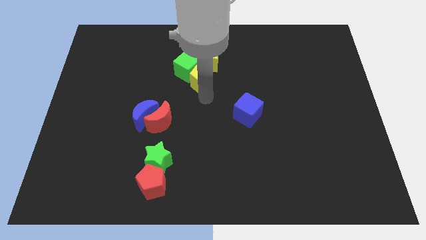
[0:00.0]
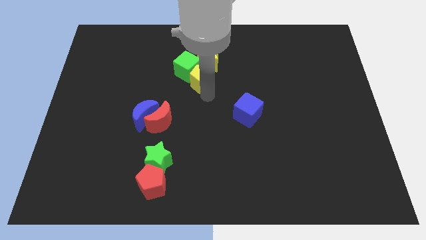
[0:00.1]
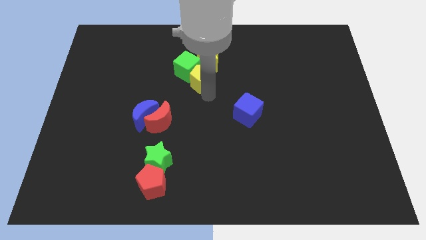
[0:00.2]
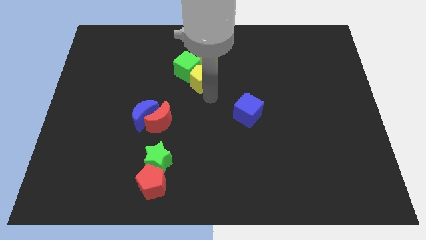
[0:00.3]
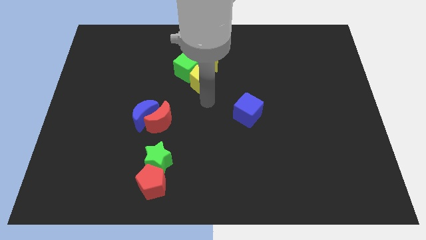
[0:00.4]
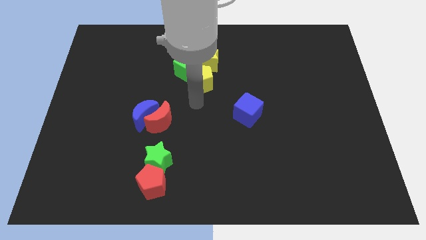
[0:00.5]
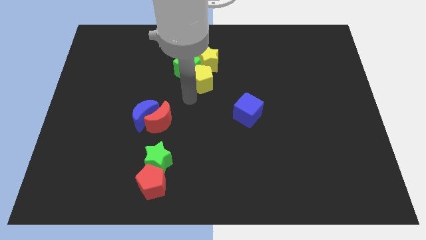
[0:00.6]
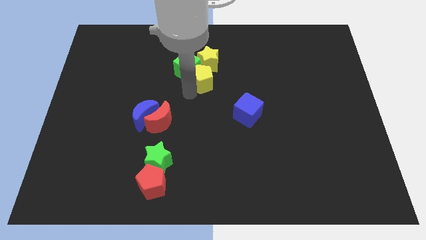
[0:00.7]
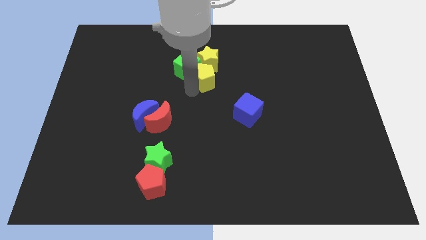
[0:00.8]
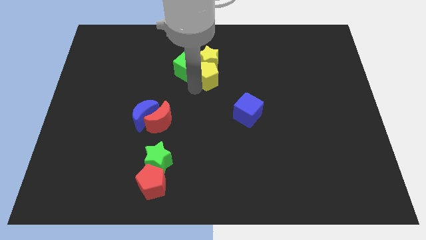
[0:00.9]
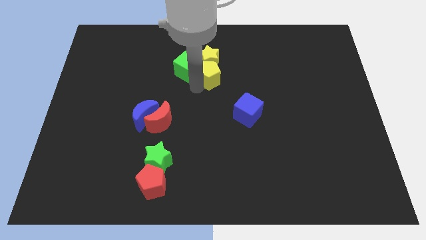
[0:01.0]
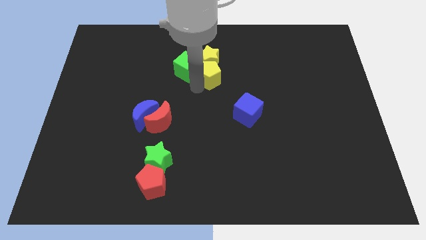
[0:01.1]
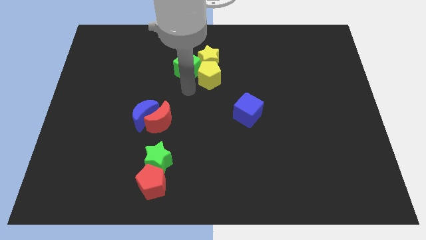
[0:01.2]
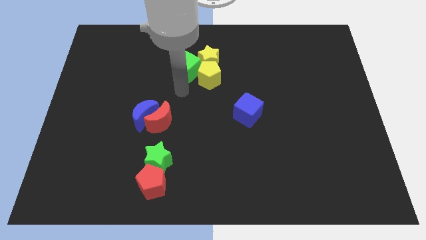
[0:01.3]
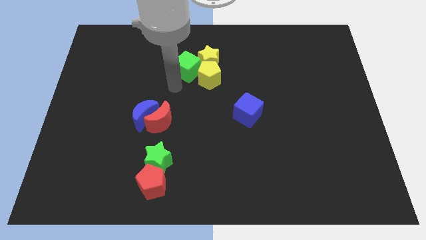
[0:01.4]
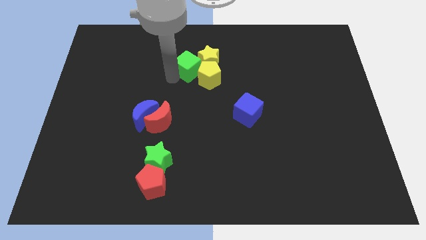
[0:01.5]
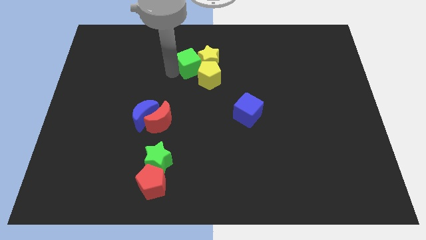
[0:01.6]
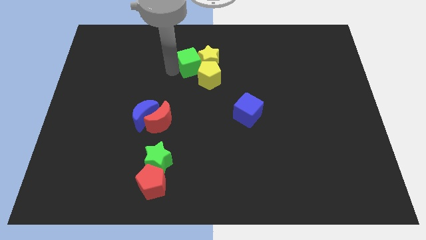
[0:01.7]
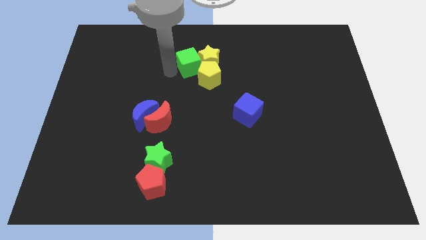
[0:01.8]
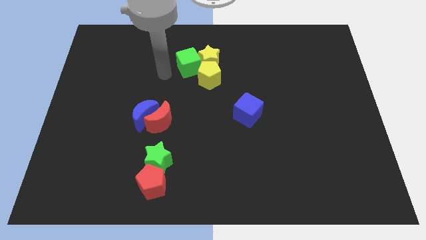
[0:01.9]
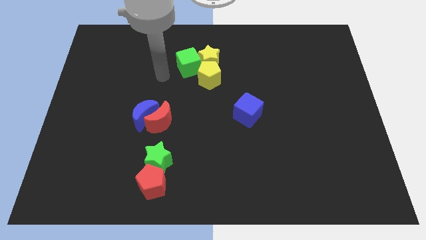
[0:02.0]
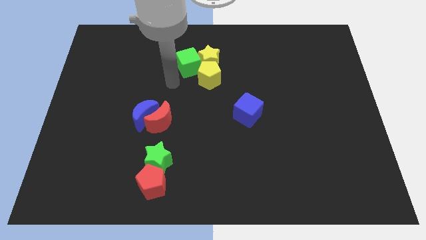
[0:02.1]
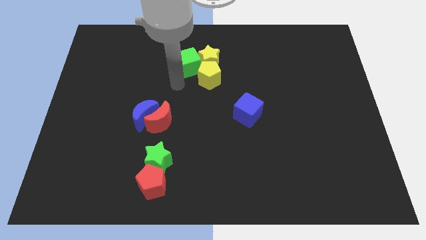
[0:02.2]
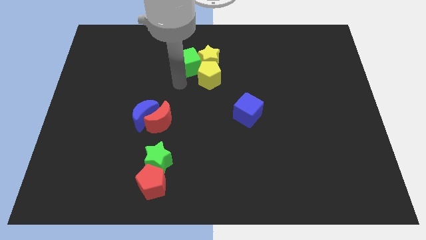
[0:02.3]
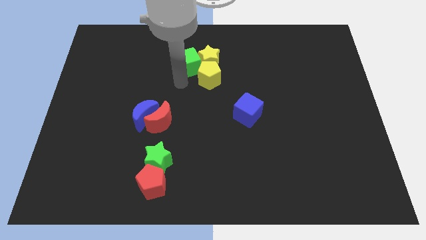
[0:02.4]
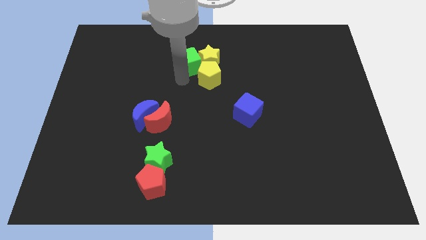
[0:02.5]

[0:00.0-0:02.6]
slightly push the yellow pentagon and push the green cube left to the green star

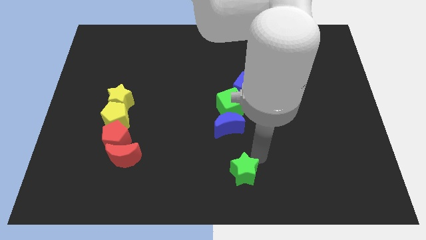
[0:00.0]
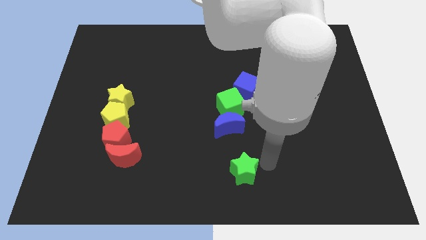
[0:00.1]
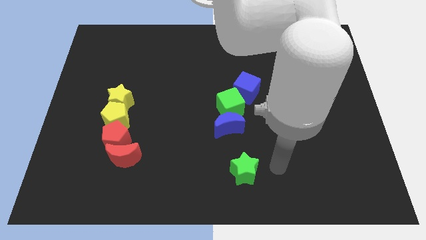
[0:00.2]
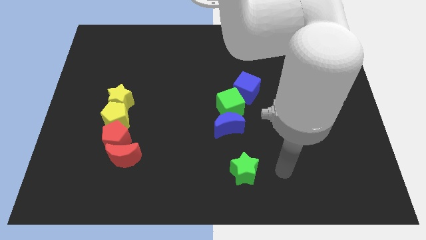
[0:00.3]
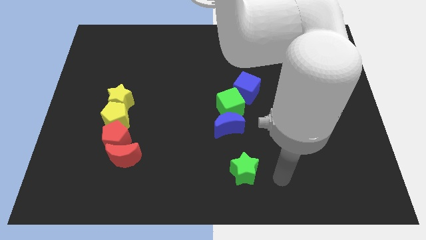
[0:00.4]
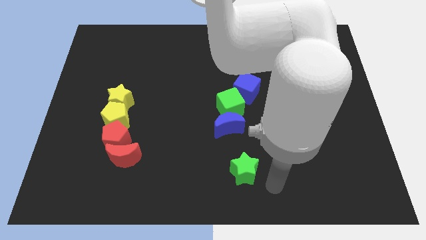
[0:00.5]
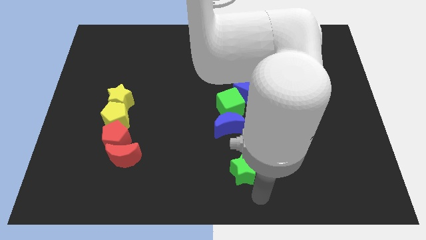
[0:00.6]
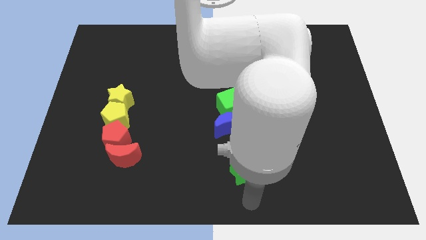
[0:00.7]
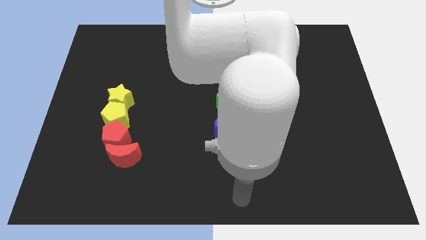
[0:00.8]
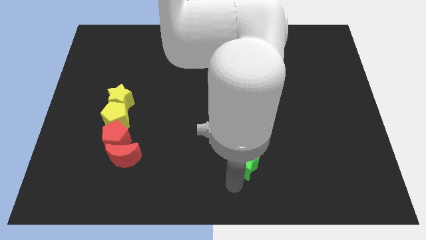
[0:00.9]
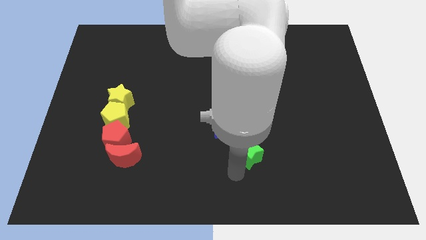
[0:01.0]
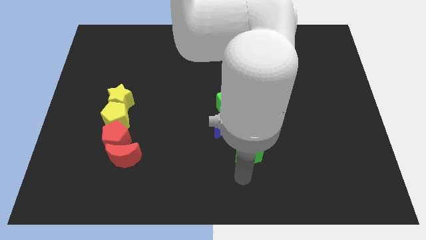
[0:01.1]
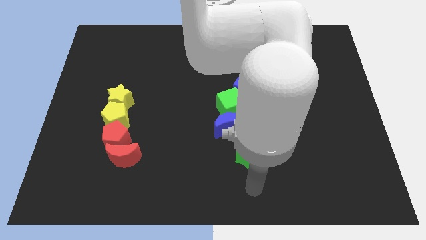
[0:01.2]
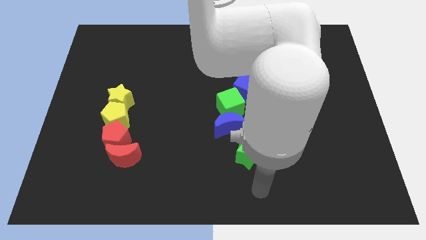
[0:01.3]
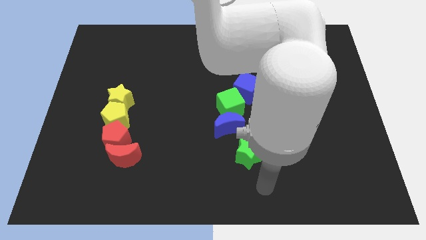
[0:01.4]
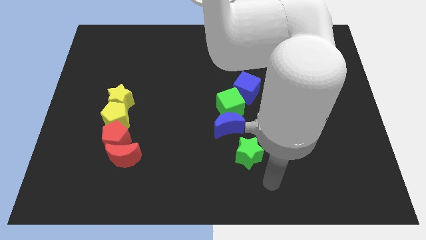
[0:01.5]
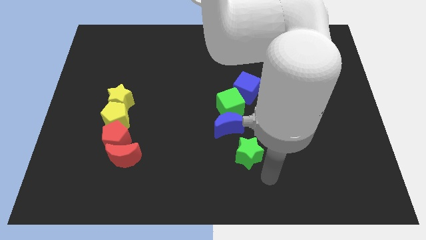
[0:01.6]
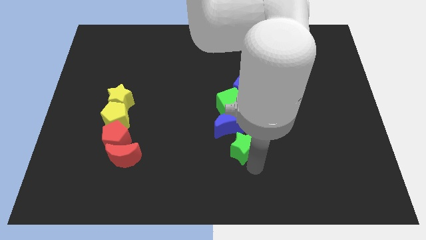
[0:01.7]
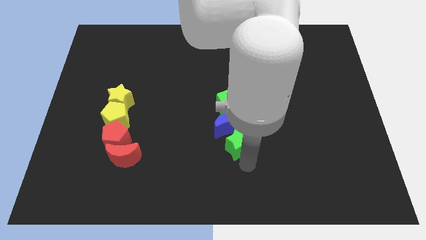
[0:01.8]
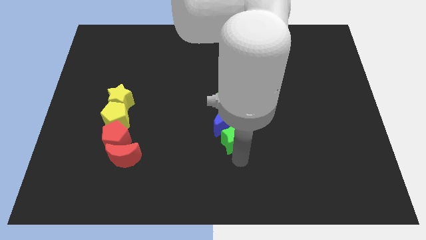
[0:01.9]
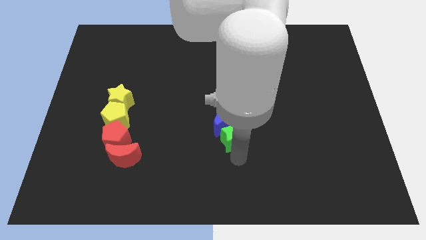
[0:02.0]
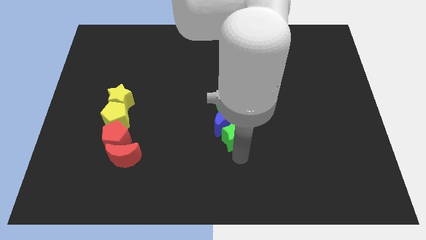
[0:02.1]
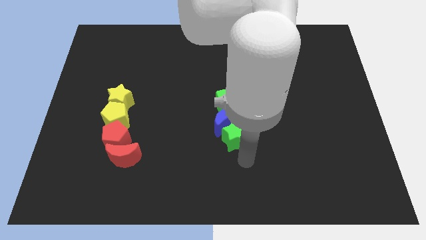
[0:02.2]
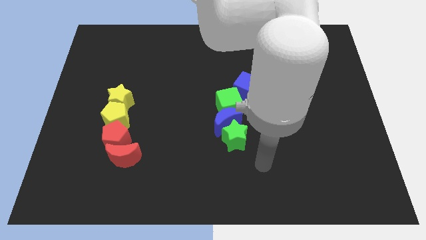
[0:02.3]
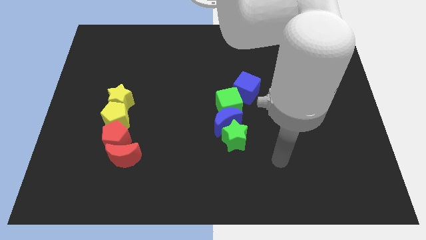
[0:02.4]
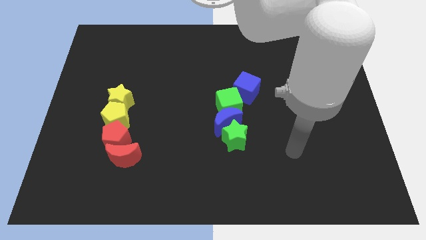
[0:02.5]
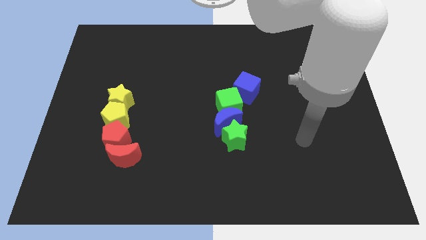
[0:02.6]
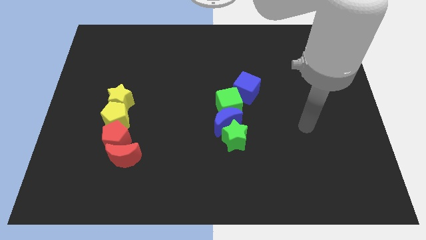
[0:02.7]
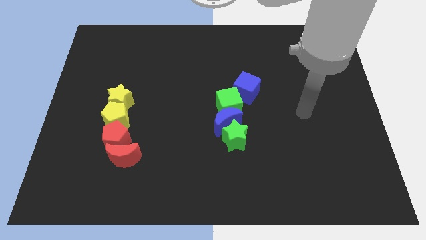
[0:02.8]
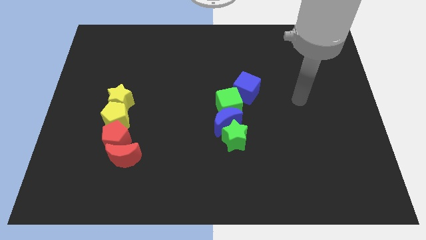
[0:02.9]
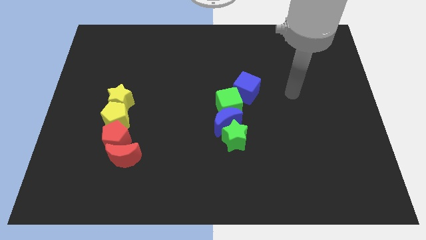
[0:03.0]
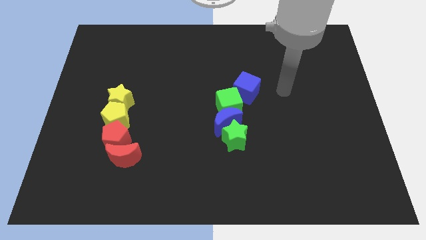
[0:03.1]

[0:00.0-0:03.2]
push the green star towards the blue moon

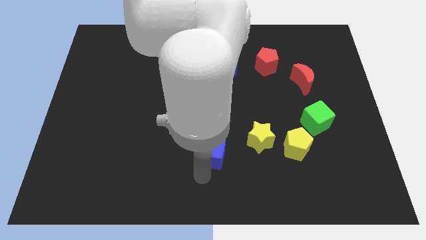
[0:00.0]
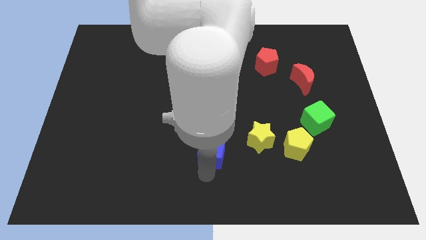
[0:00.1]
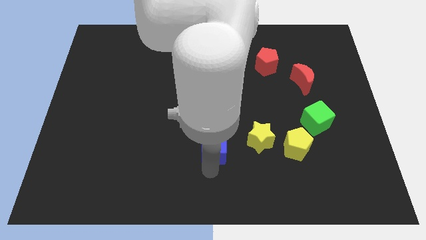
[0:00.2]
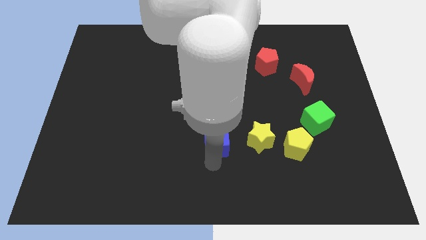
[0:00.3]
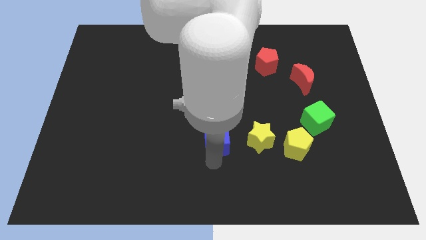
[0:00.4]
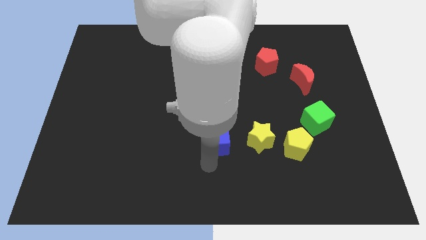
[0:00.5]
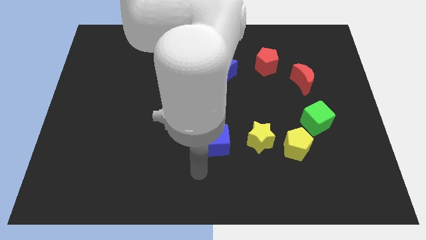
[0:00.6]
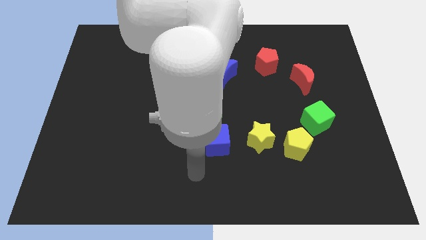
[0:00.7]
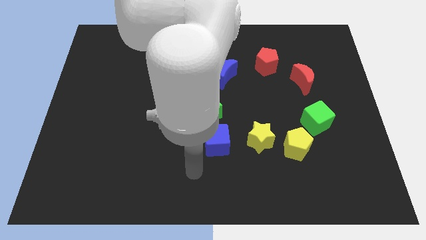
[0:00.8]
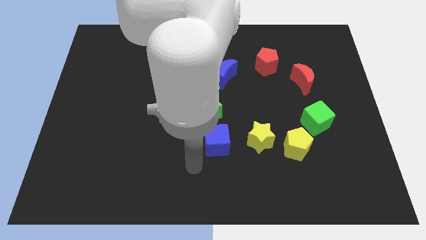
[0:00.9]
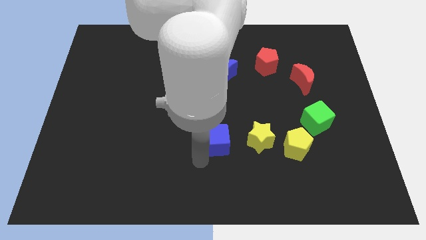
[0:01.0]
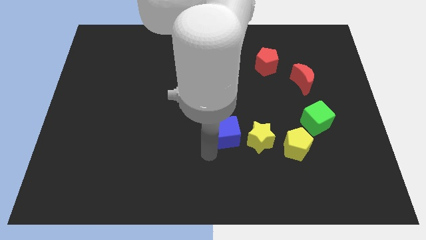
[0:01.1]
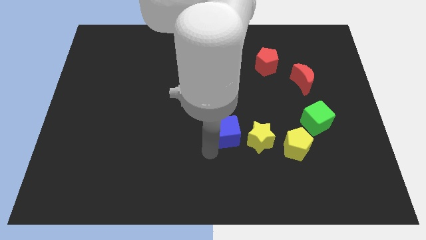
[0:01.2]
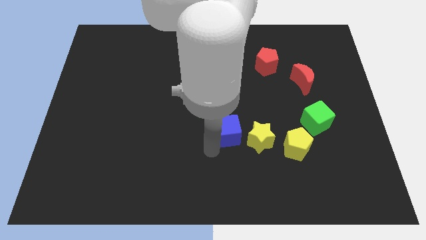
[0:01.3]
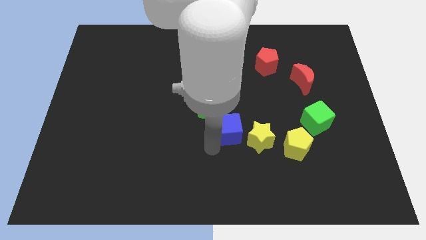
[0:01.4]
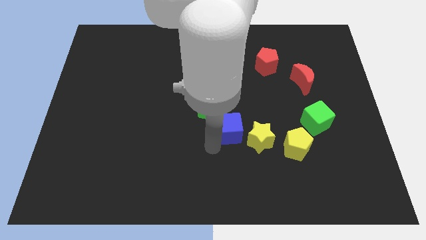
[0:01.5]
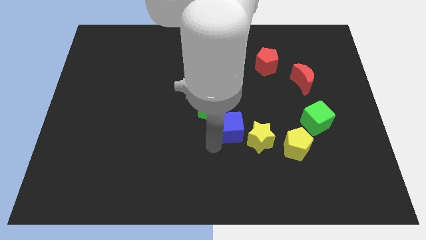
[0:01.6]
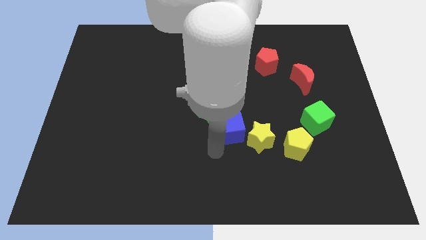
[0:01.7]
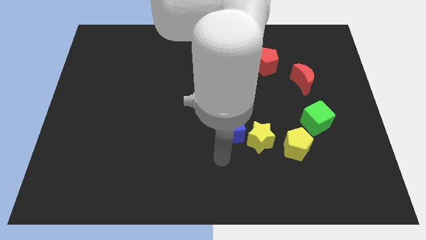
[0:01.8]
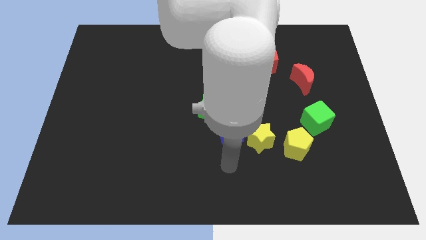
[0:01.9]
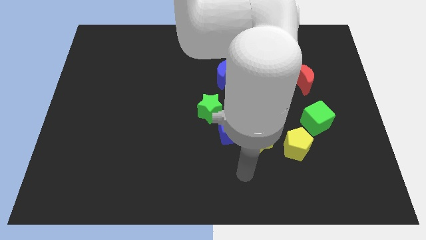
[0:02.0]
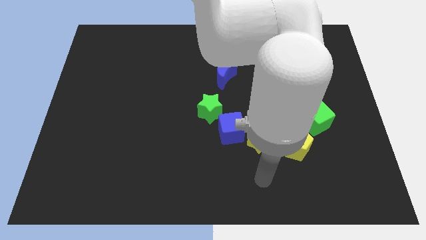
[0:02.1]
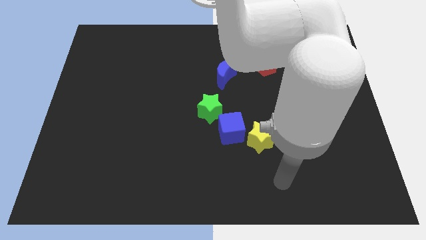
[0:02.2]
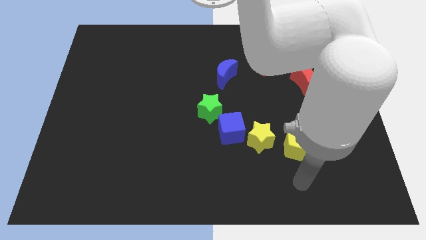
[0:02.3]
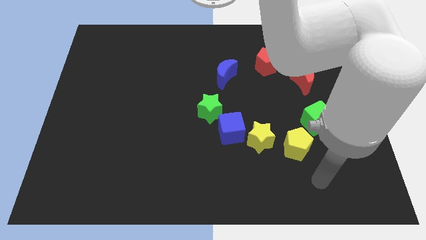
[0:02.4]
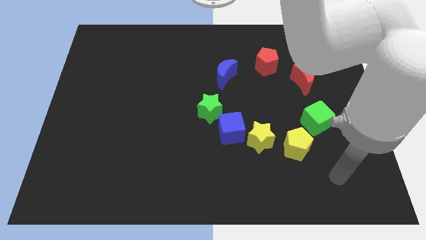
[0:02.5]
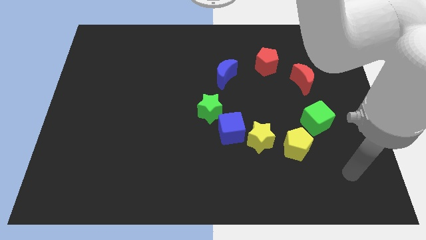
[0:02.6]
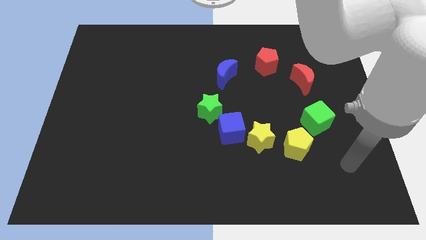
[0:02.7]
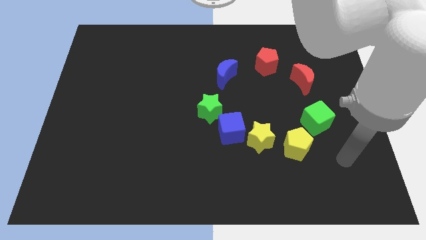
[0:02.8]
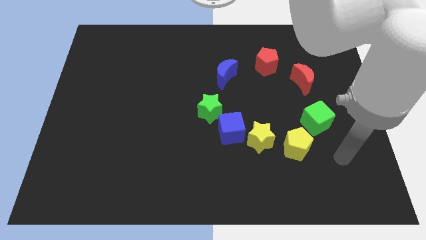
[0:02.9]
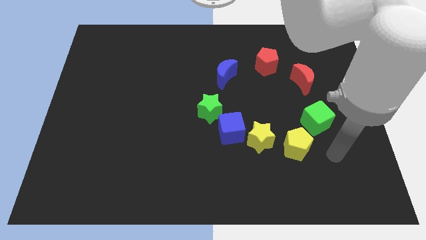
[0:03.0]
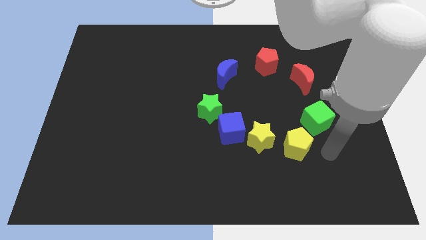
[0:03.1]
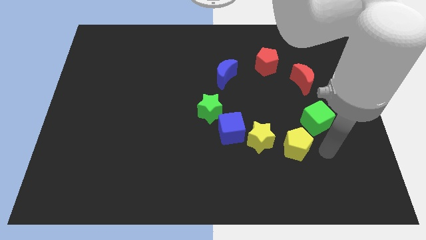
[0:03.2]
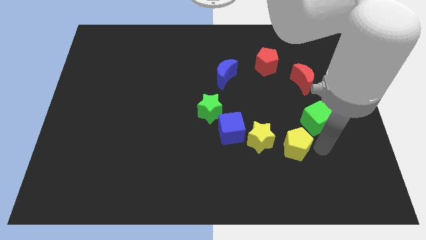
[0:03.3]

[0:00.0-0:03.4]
place blue cube in between yellow star and the green star
